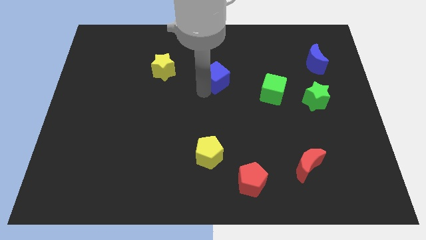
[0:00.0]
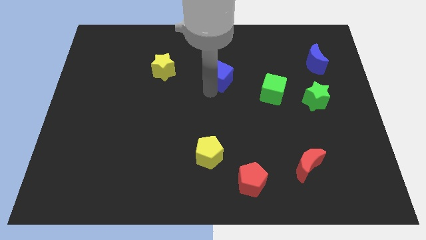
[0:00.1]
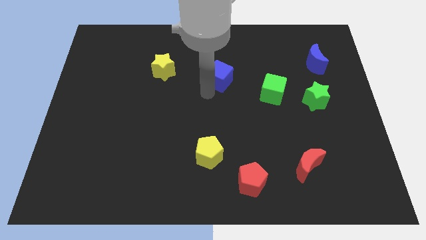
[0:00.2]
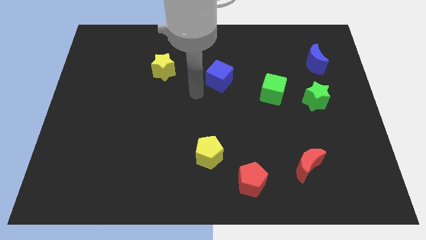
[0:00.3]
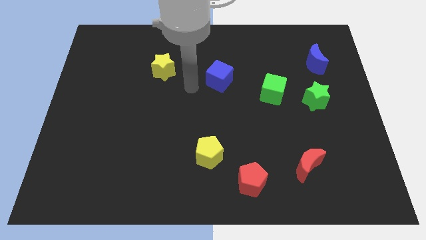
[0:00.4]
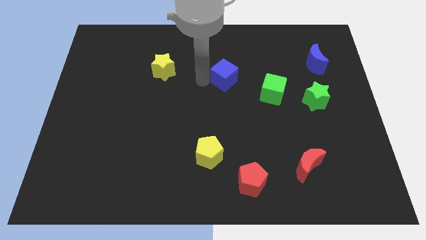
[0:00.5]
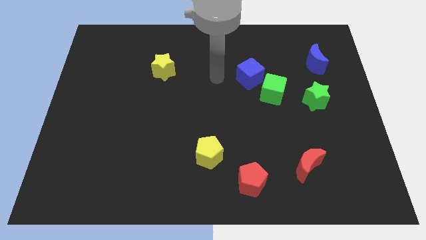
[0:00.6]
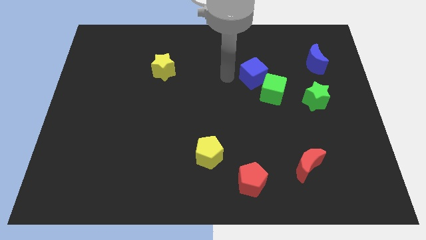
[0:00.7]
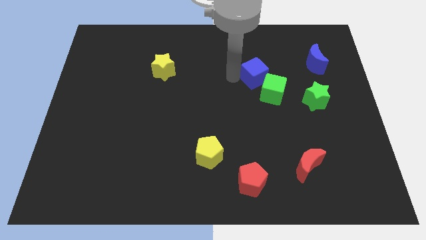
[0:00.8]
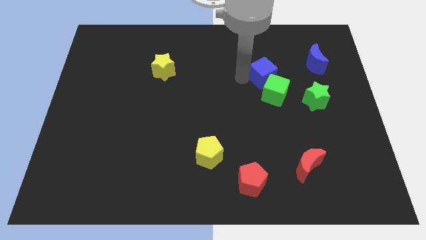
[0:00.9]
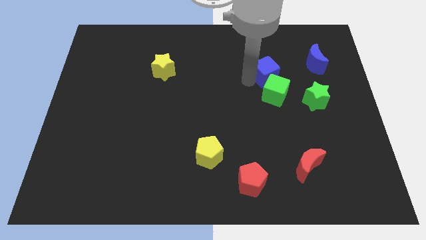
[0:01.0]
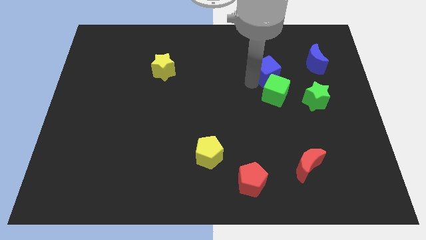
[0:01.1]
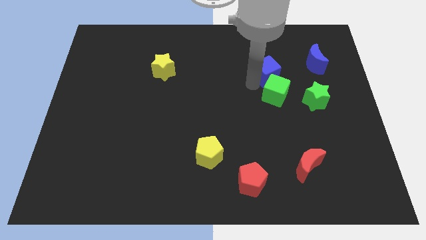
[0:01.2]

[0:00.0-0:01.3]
push blue cube above green cube

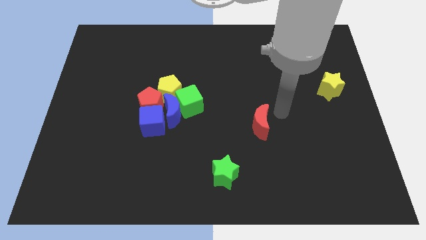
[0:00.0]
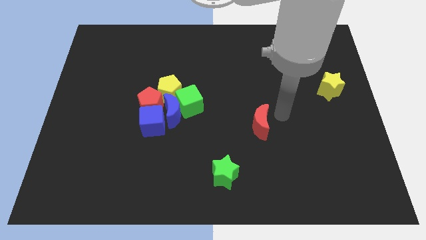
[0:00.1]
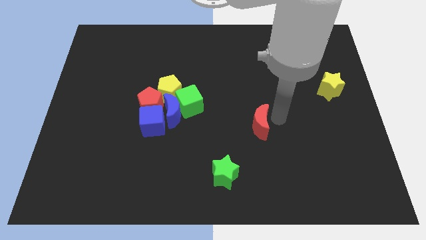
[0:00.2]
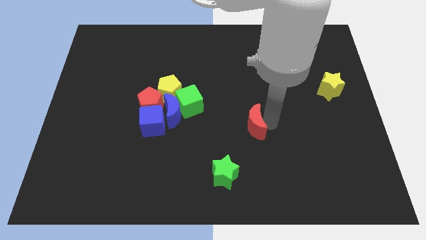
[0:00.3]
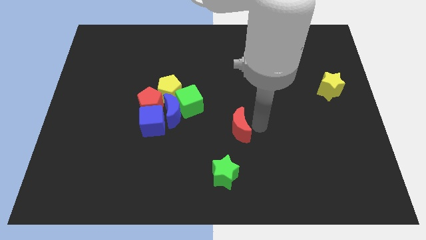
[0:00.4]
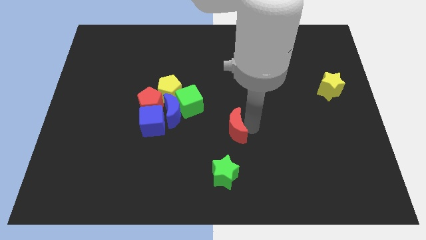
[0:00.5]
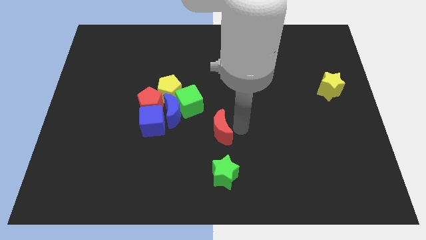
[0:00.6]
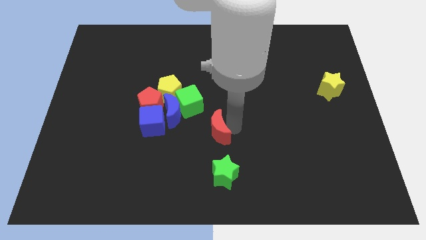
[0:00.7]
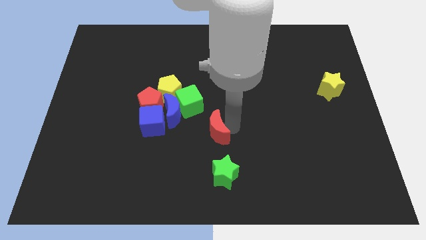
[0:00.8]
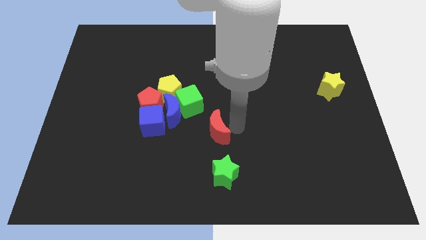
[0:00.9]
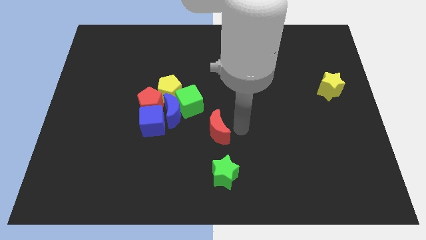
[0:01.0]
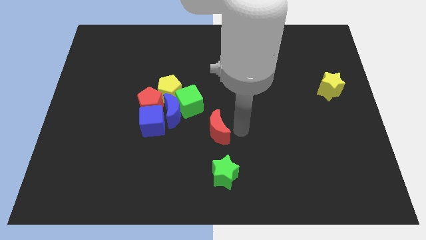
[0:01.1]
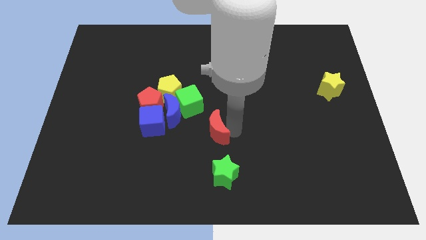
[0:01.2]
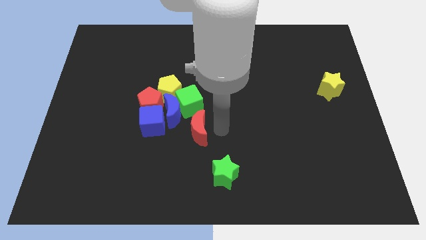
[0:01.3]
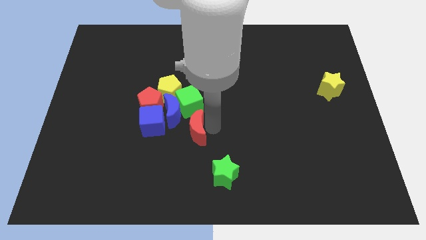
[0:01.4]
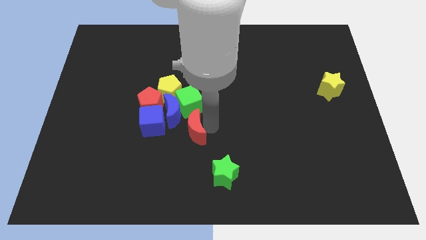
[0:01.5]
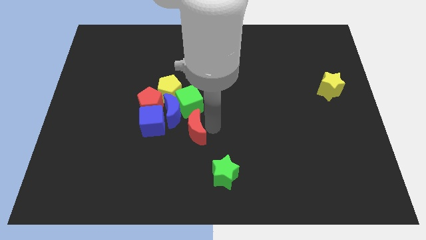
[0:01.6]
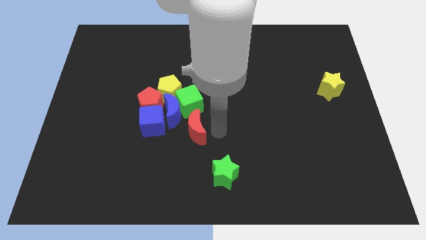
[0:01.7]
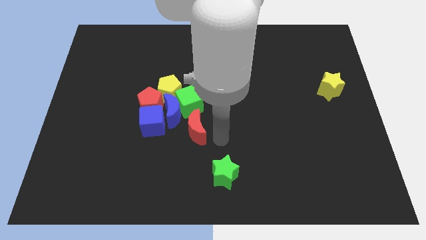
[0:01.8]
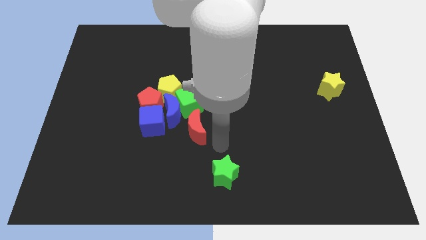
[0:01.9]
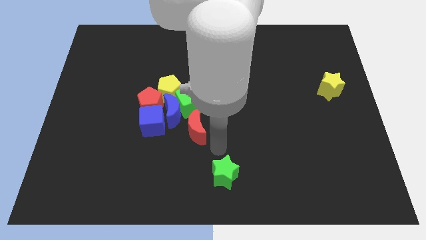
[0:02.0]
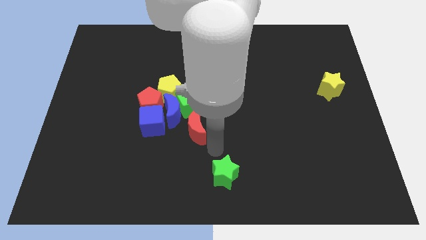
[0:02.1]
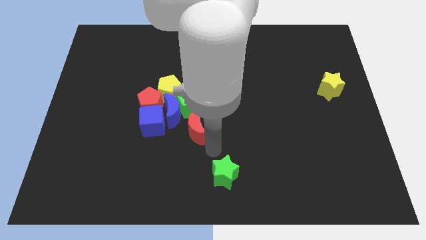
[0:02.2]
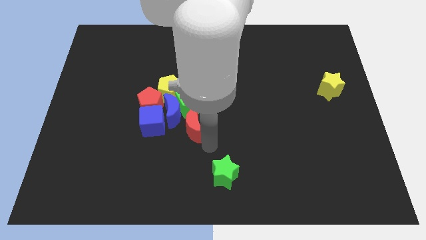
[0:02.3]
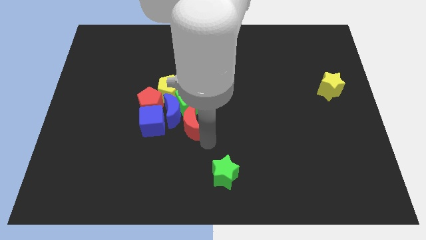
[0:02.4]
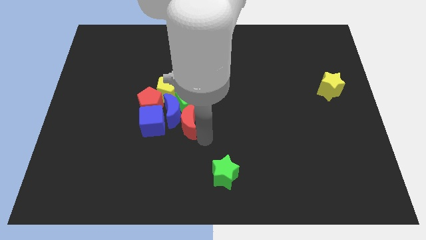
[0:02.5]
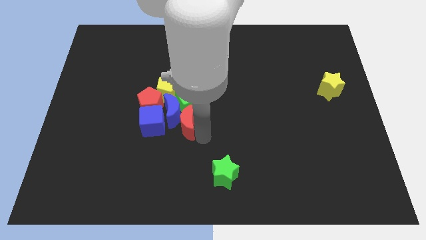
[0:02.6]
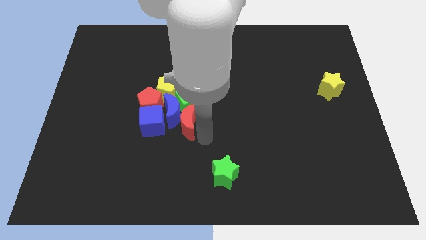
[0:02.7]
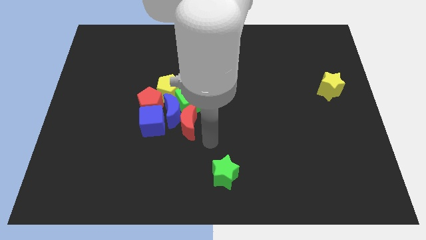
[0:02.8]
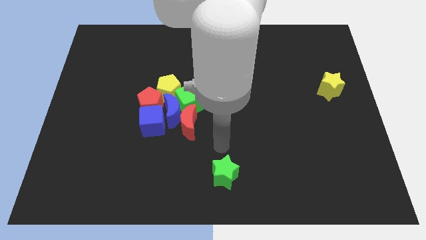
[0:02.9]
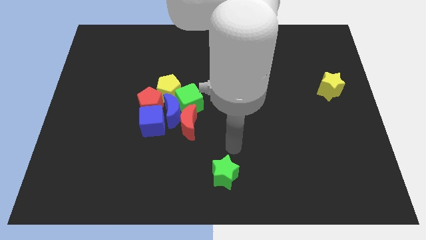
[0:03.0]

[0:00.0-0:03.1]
place the red moon below the green cube

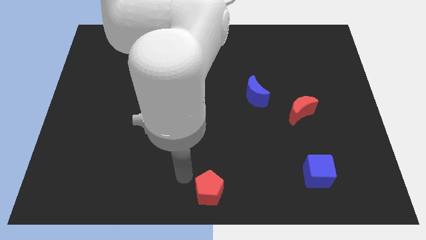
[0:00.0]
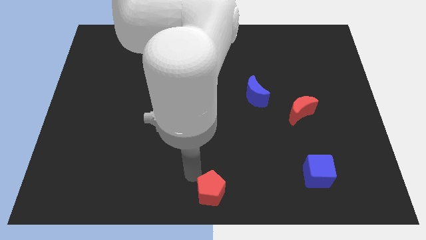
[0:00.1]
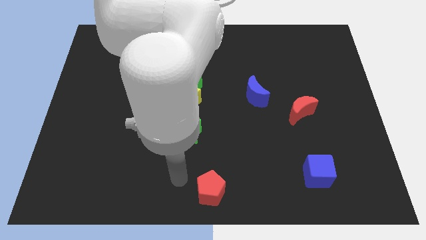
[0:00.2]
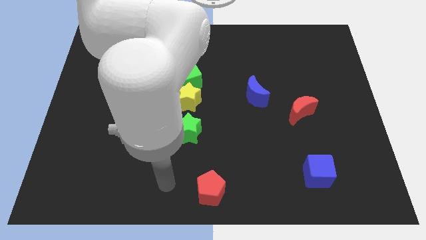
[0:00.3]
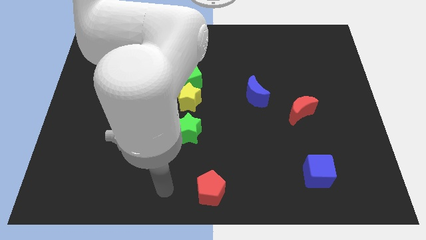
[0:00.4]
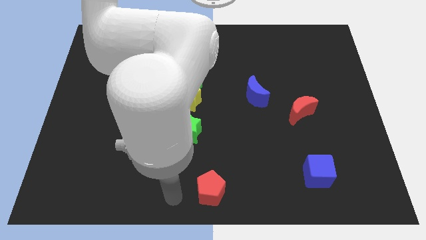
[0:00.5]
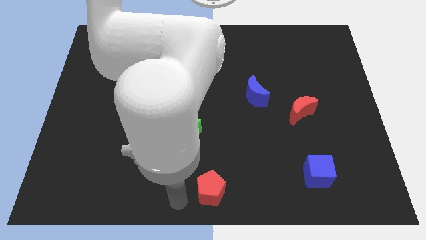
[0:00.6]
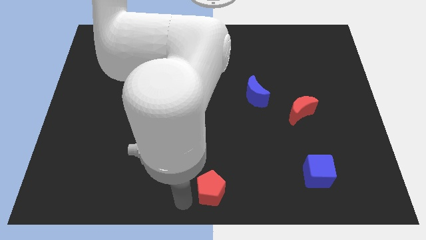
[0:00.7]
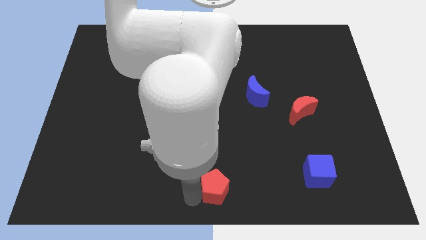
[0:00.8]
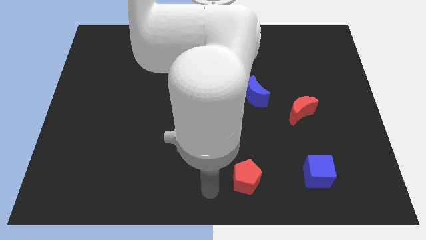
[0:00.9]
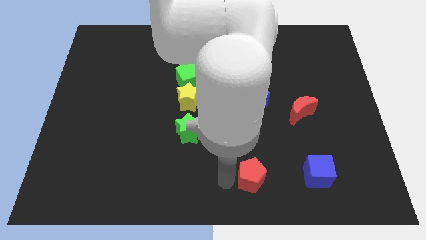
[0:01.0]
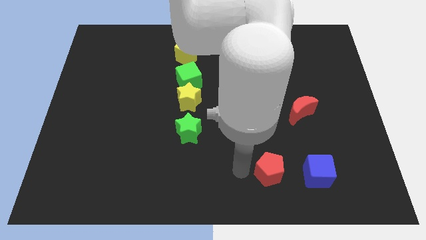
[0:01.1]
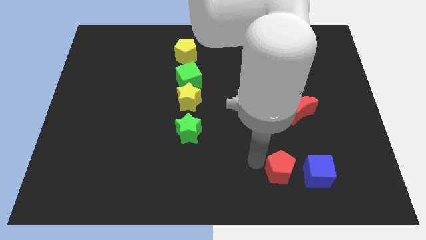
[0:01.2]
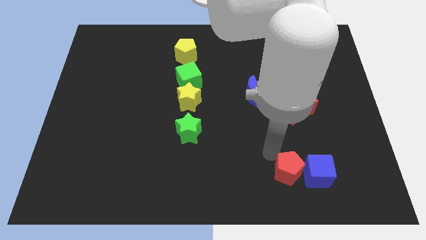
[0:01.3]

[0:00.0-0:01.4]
move the red pentagon to the left side of the blue cube

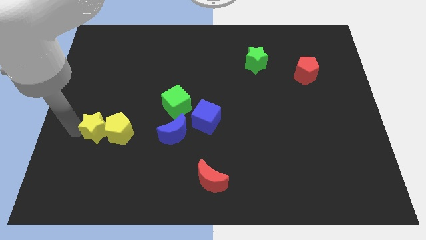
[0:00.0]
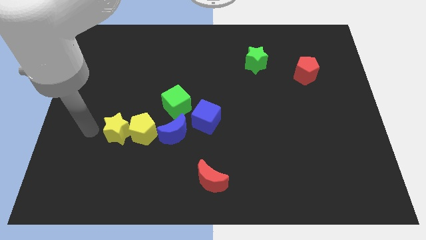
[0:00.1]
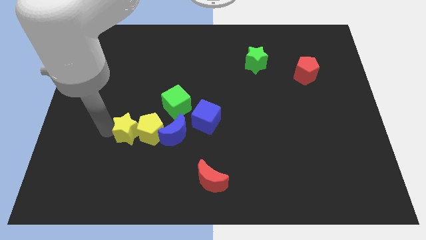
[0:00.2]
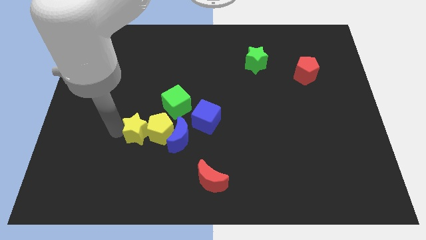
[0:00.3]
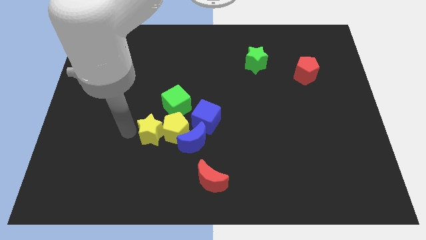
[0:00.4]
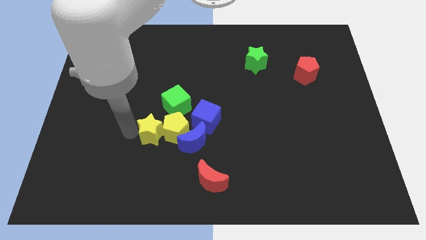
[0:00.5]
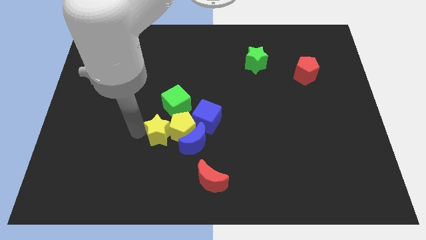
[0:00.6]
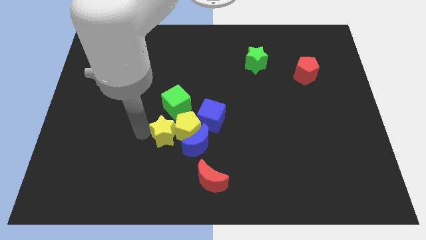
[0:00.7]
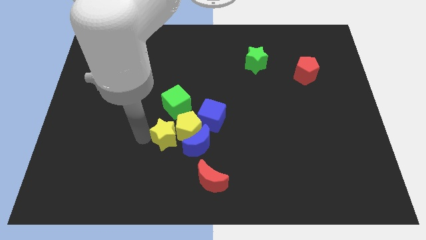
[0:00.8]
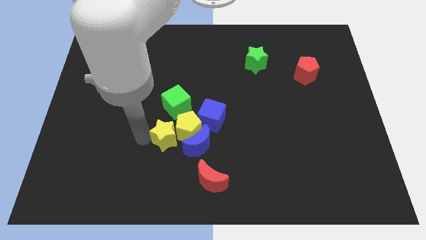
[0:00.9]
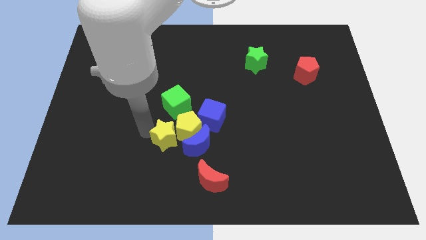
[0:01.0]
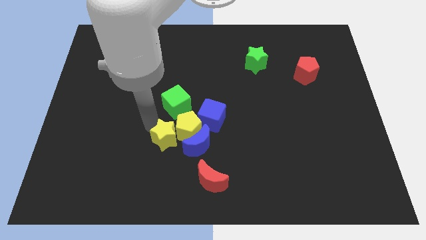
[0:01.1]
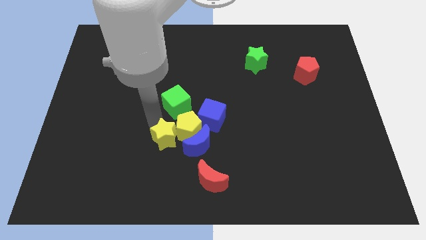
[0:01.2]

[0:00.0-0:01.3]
push the yellow star slightly to the right

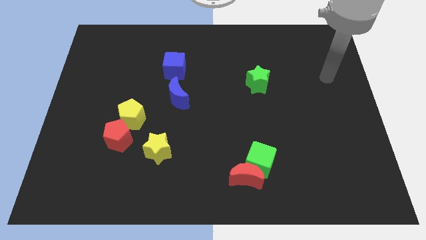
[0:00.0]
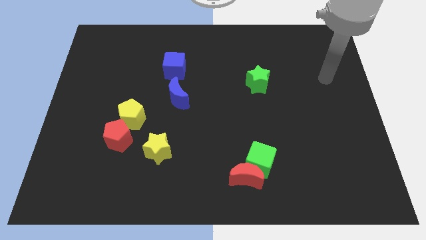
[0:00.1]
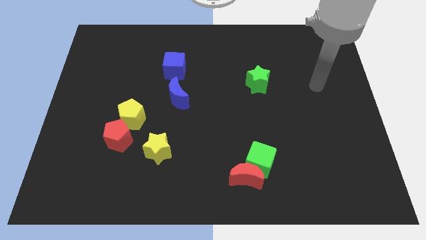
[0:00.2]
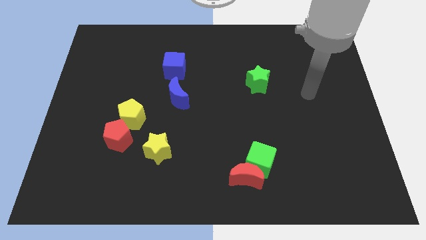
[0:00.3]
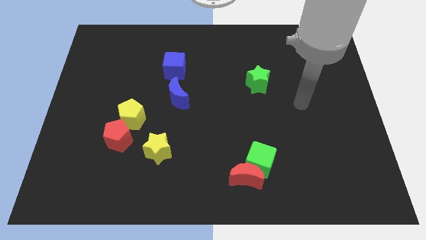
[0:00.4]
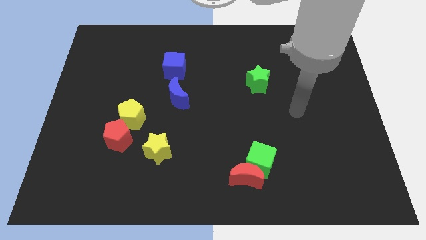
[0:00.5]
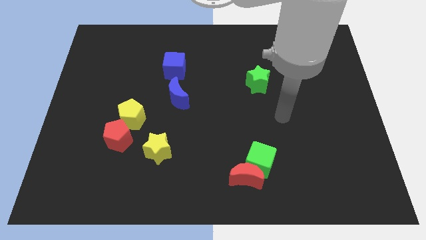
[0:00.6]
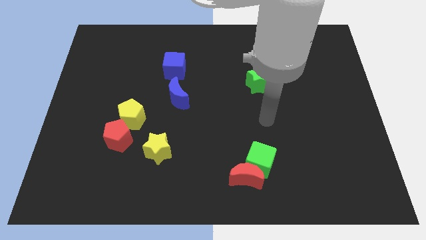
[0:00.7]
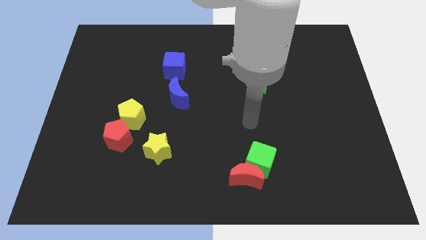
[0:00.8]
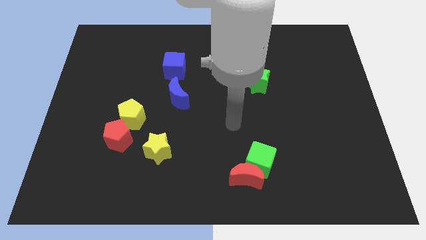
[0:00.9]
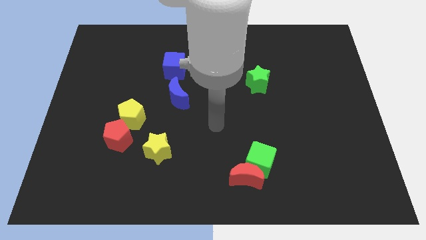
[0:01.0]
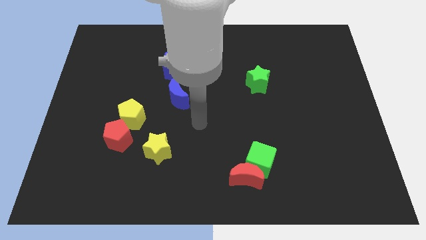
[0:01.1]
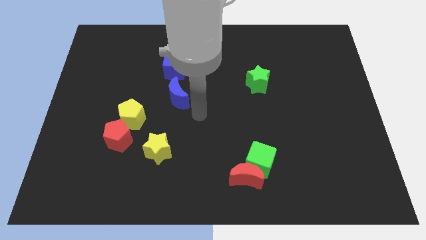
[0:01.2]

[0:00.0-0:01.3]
move your arm to the center of the board

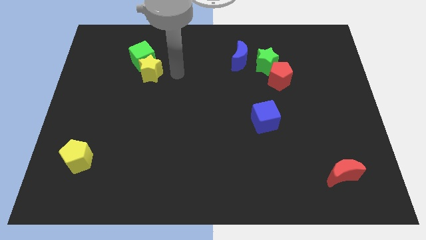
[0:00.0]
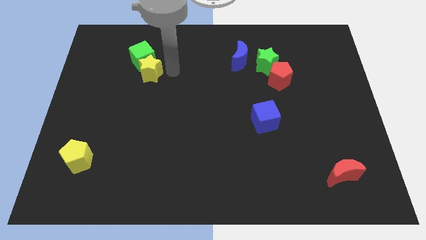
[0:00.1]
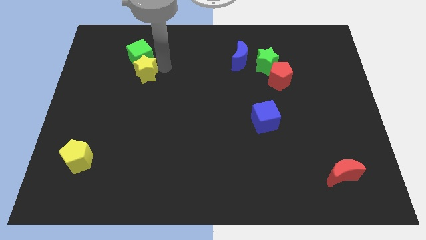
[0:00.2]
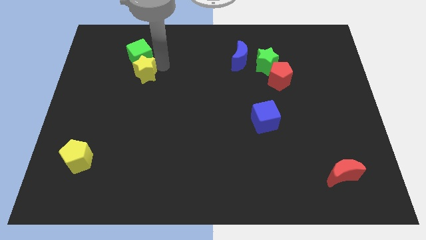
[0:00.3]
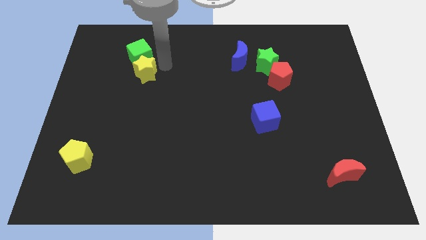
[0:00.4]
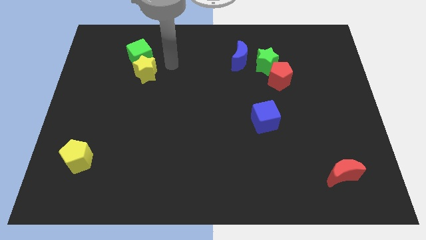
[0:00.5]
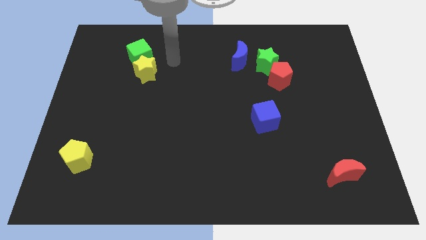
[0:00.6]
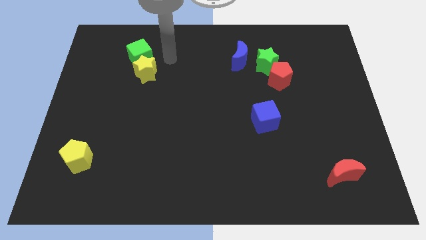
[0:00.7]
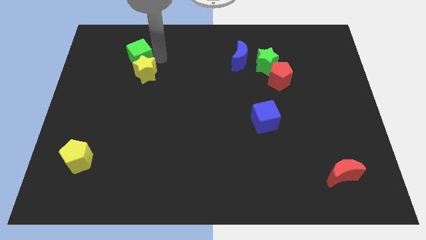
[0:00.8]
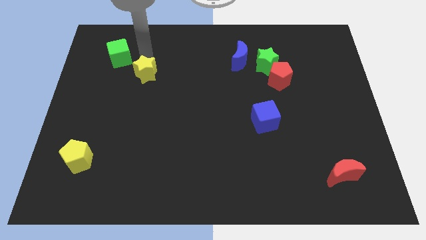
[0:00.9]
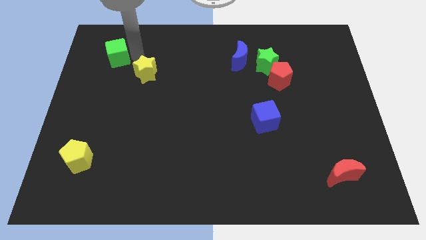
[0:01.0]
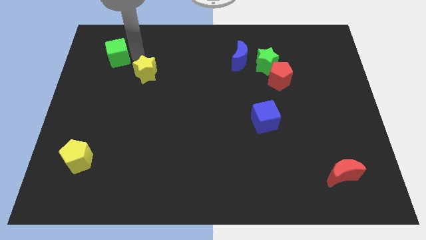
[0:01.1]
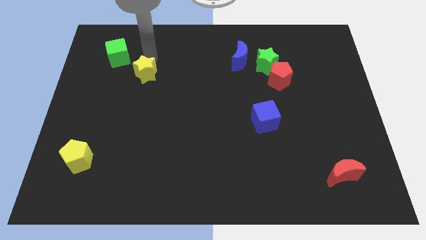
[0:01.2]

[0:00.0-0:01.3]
separate the green cube from the yellow star
